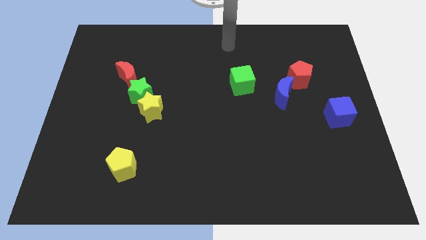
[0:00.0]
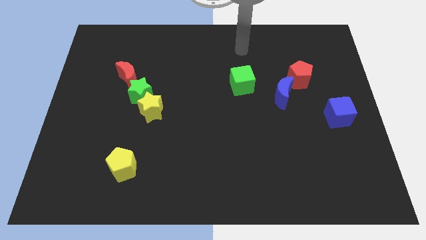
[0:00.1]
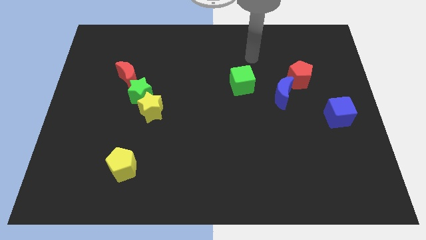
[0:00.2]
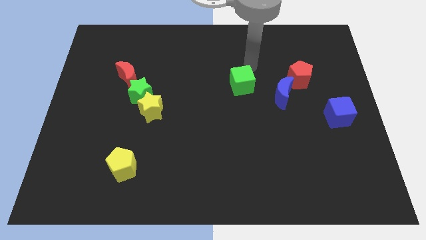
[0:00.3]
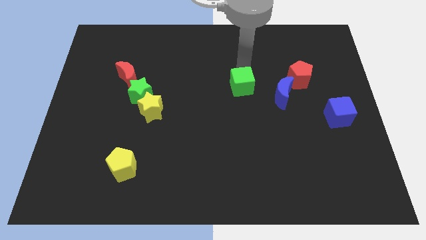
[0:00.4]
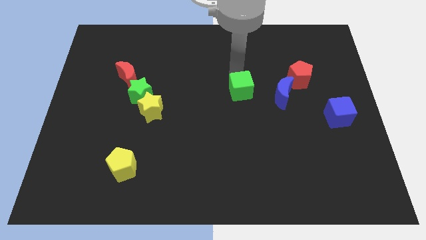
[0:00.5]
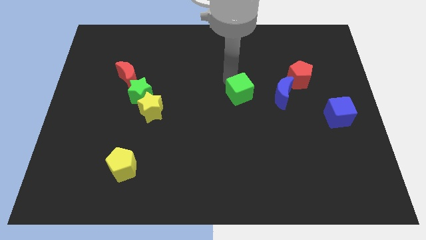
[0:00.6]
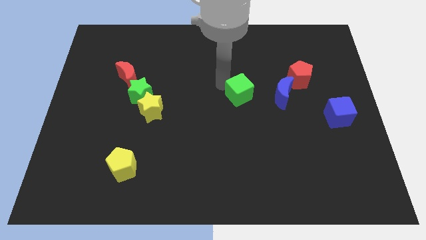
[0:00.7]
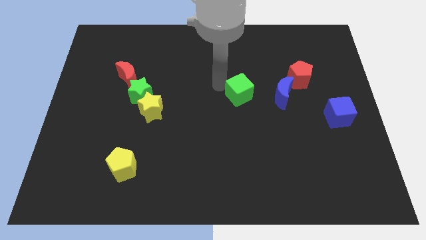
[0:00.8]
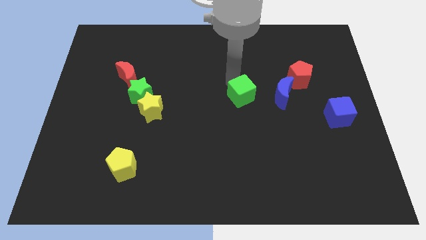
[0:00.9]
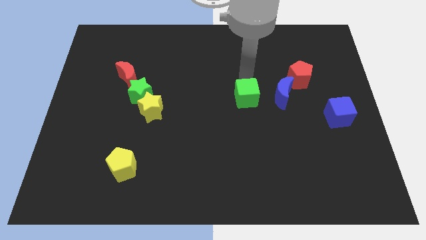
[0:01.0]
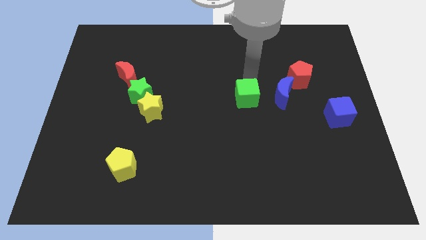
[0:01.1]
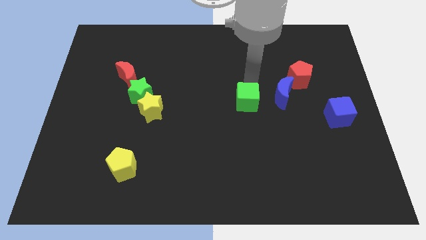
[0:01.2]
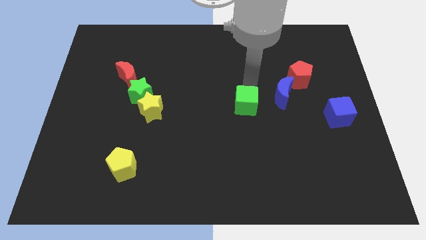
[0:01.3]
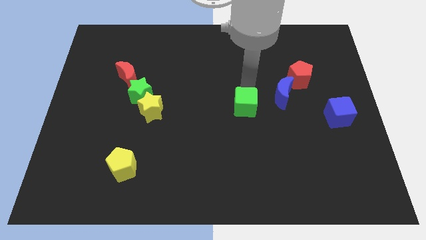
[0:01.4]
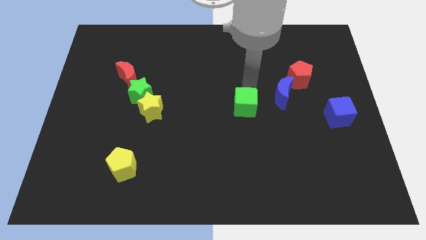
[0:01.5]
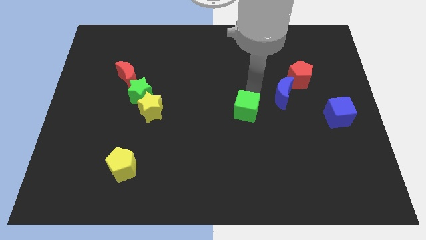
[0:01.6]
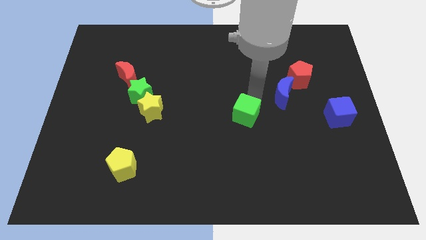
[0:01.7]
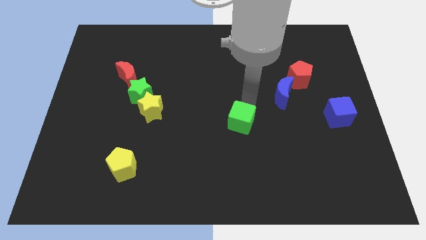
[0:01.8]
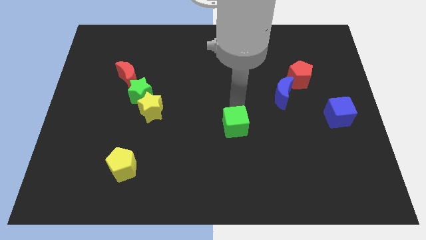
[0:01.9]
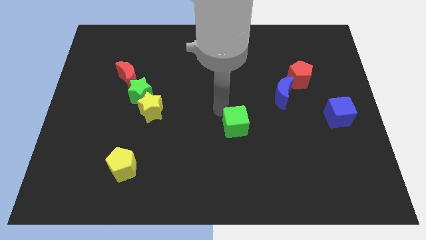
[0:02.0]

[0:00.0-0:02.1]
push the green cube towards the center of board

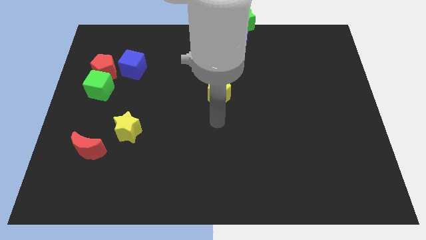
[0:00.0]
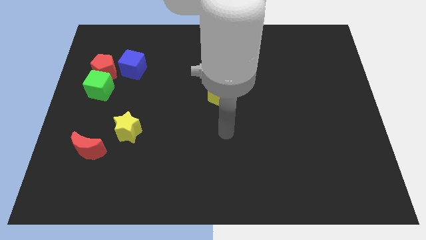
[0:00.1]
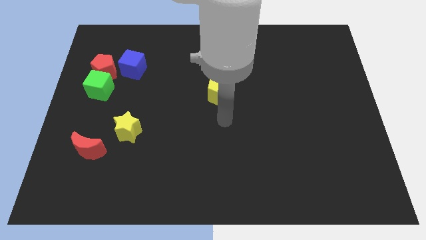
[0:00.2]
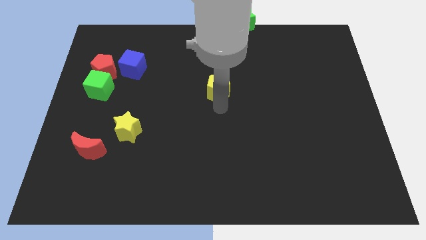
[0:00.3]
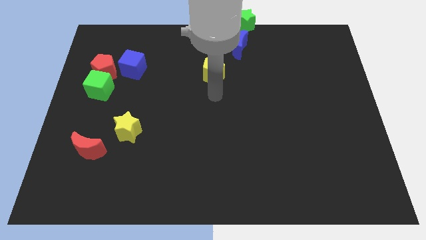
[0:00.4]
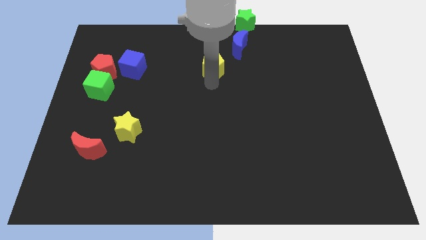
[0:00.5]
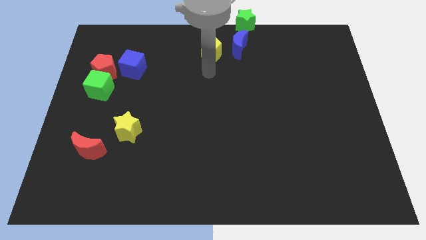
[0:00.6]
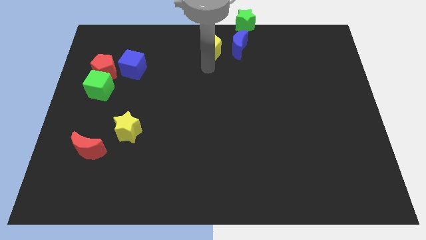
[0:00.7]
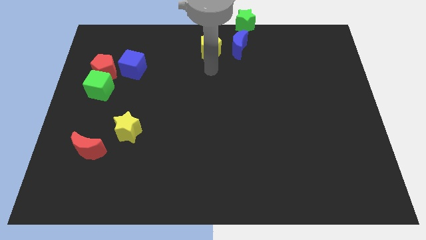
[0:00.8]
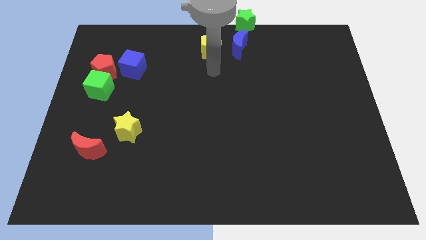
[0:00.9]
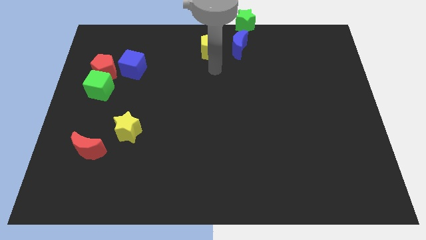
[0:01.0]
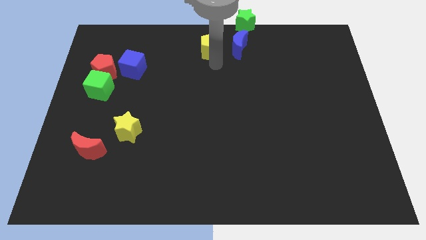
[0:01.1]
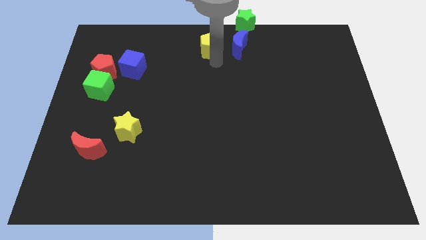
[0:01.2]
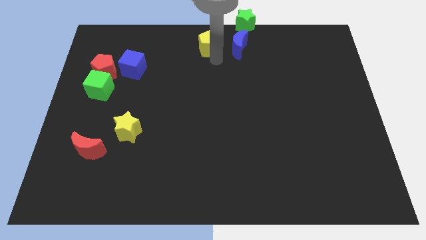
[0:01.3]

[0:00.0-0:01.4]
place yellow pentagon left to blue crescent

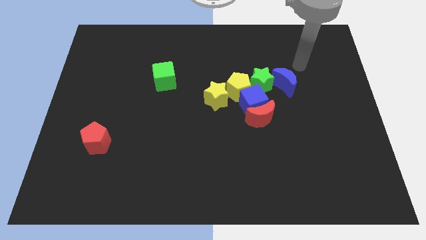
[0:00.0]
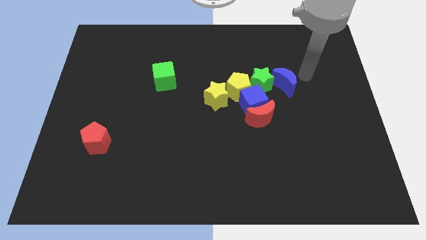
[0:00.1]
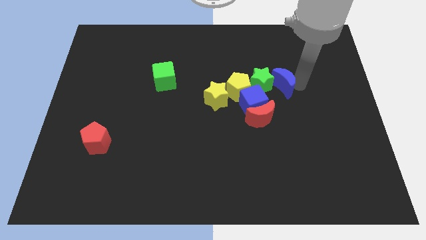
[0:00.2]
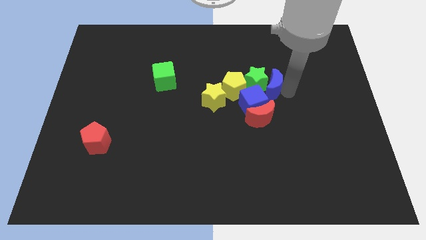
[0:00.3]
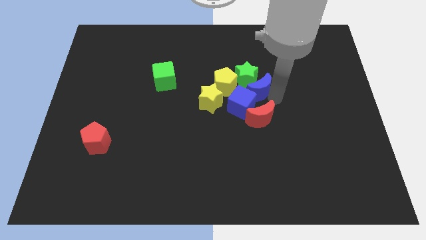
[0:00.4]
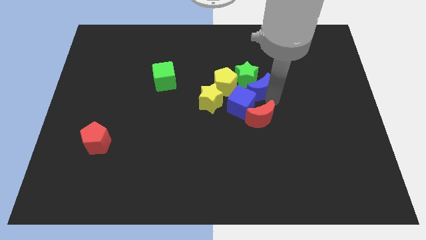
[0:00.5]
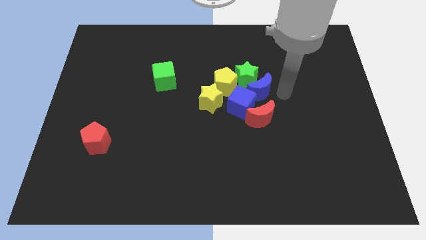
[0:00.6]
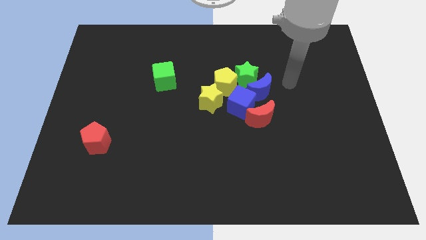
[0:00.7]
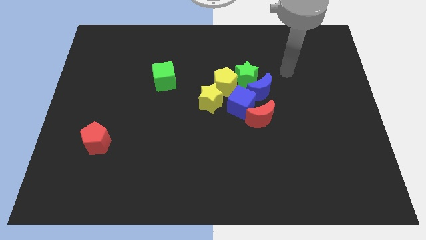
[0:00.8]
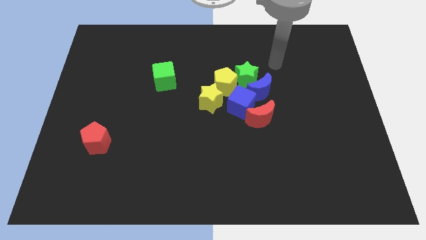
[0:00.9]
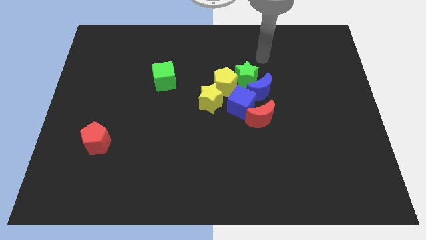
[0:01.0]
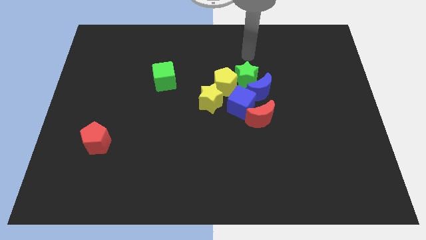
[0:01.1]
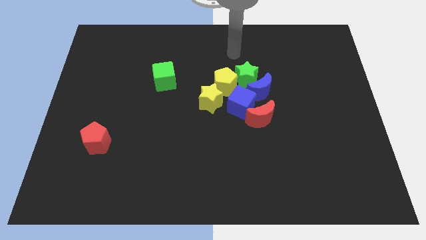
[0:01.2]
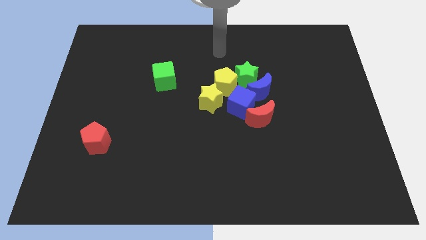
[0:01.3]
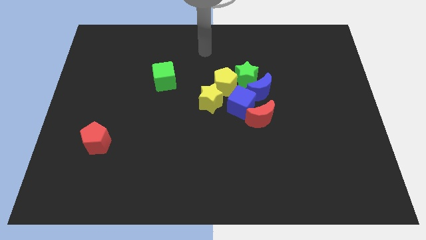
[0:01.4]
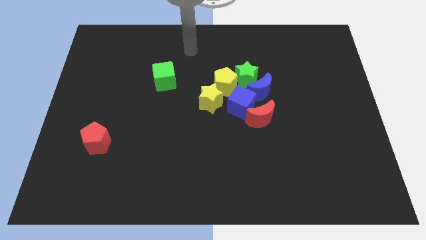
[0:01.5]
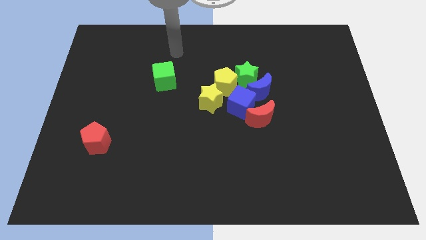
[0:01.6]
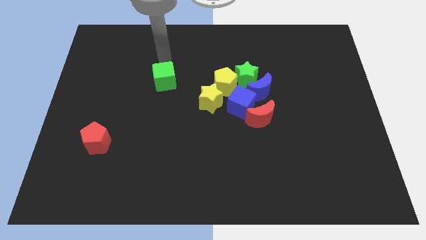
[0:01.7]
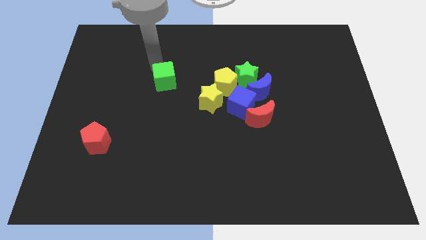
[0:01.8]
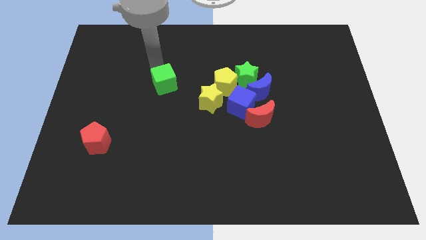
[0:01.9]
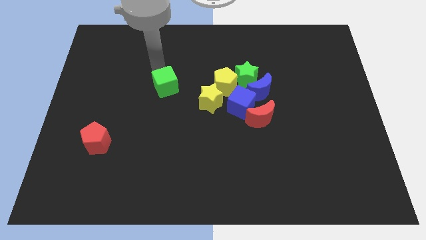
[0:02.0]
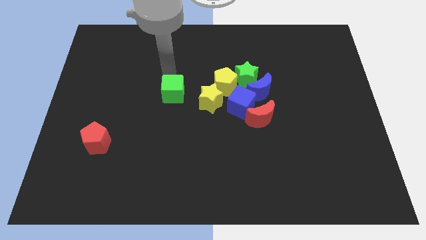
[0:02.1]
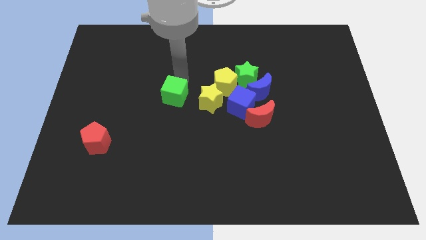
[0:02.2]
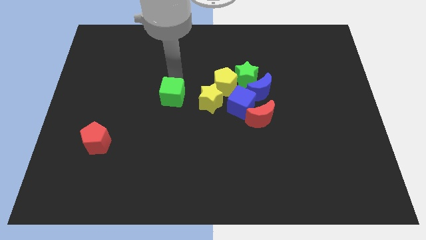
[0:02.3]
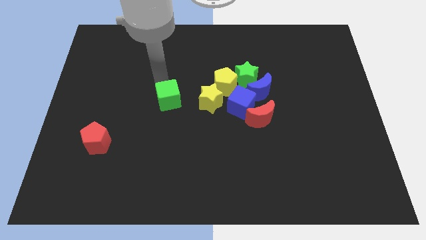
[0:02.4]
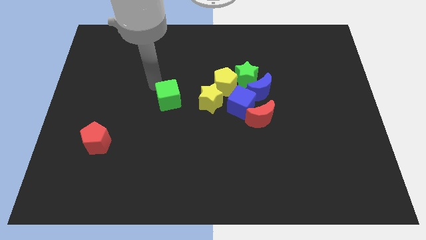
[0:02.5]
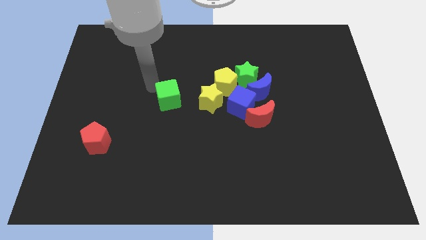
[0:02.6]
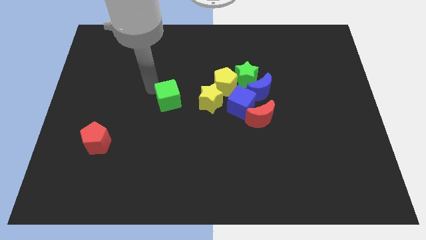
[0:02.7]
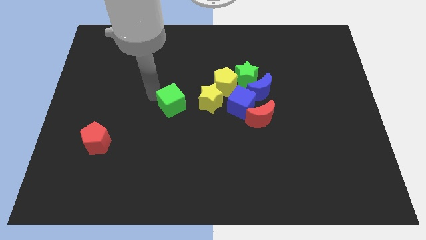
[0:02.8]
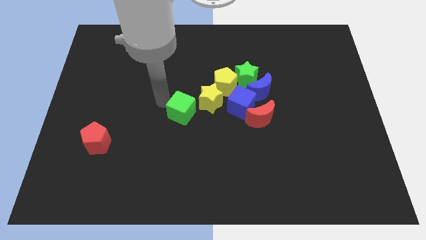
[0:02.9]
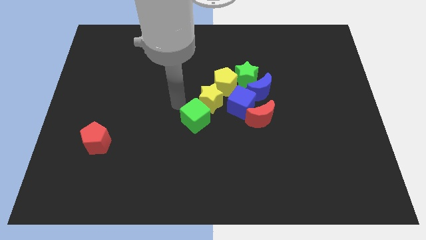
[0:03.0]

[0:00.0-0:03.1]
push the green cube below the yellow star

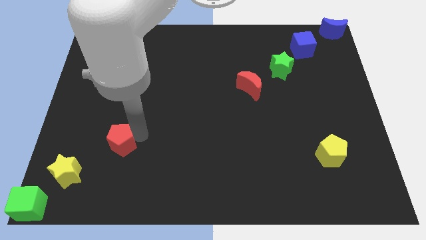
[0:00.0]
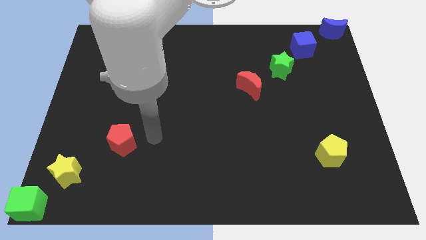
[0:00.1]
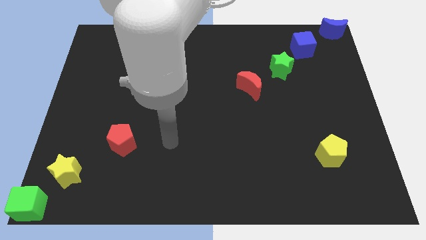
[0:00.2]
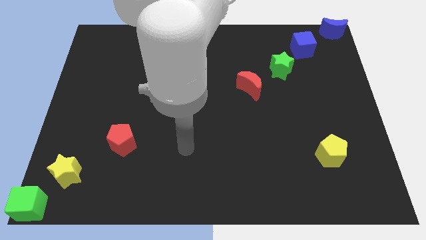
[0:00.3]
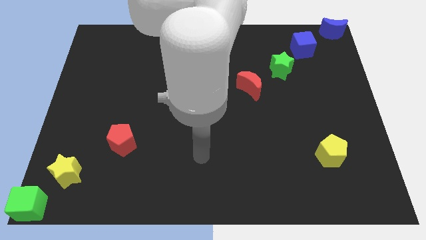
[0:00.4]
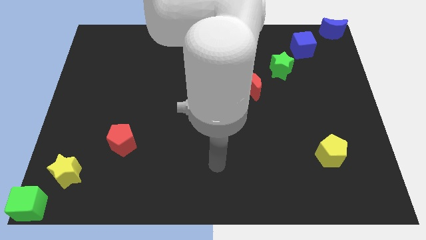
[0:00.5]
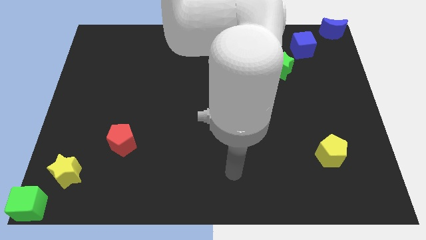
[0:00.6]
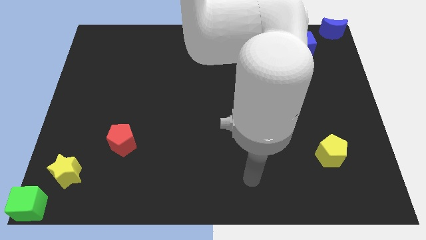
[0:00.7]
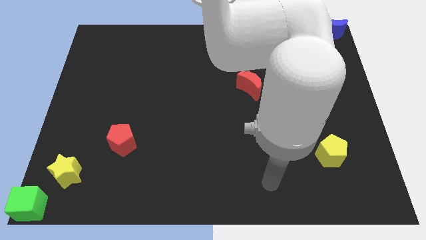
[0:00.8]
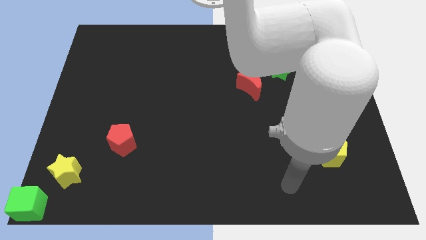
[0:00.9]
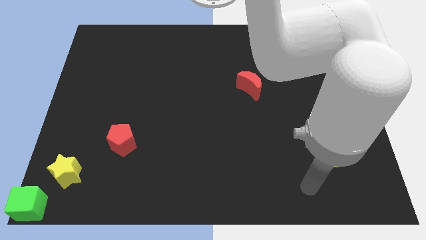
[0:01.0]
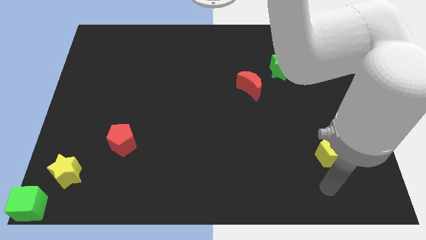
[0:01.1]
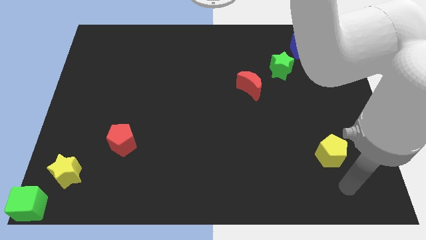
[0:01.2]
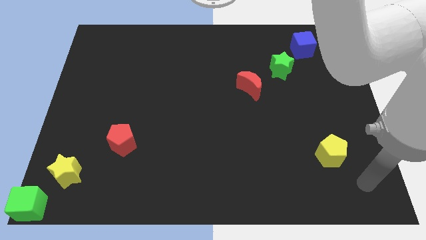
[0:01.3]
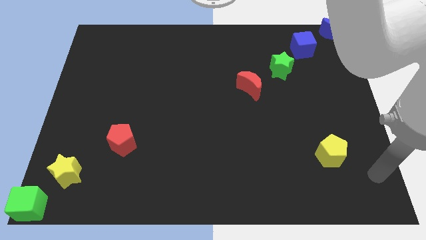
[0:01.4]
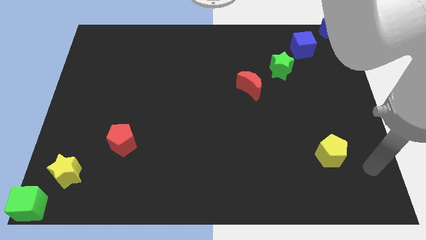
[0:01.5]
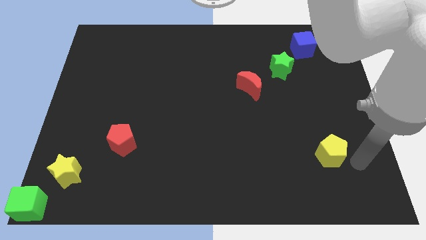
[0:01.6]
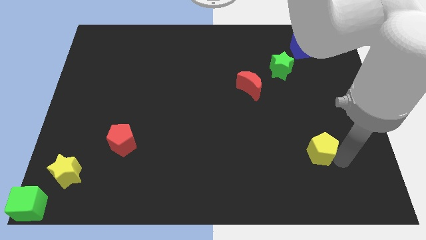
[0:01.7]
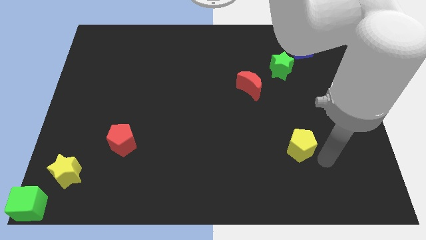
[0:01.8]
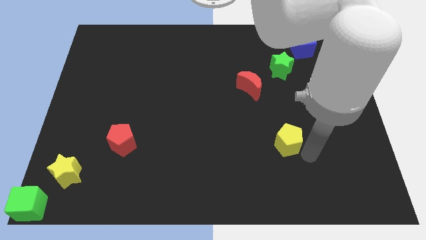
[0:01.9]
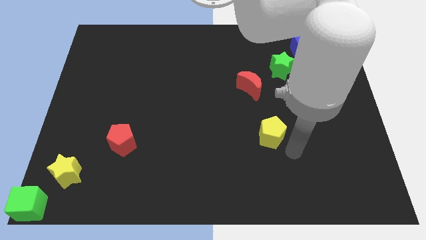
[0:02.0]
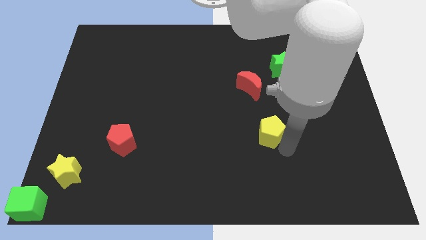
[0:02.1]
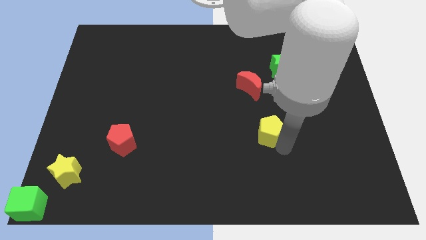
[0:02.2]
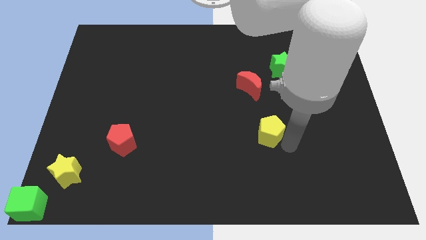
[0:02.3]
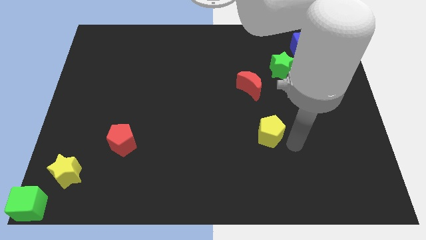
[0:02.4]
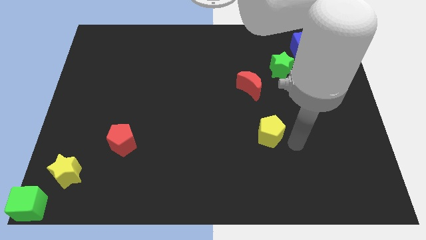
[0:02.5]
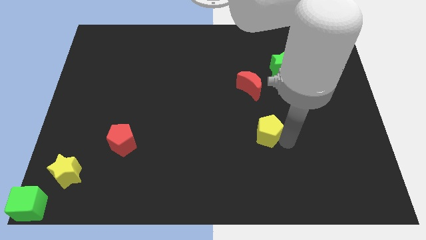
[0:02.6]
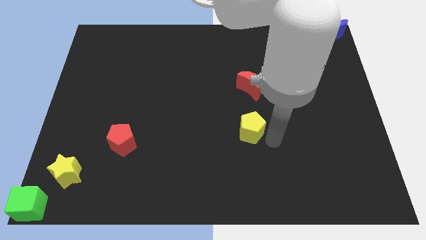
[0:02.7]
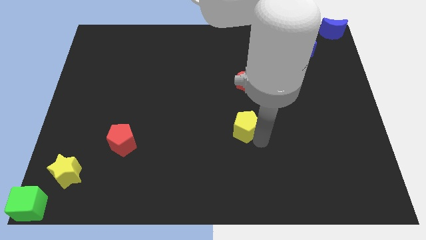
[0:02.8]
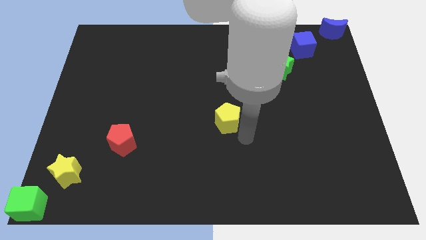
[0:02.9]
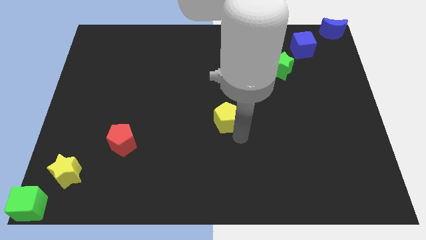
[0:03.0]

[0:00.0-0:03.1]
push the yellow pentagon towards the center of the board
